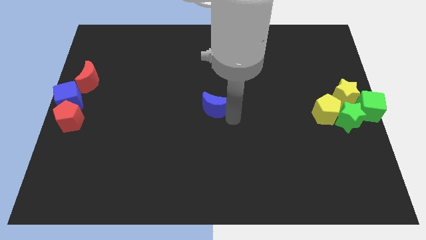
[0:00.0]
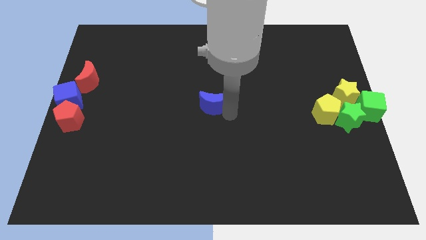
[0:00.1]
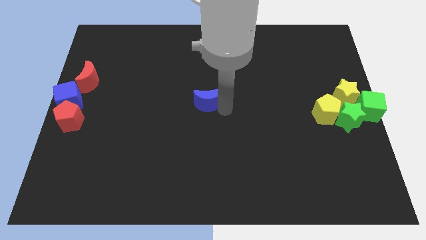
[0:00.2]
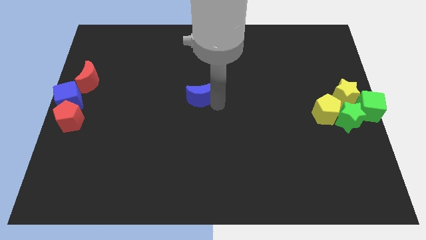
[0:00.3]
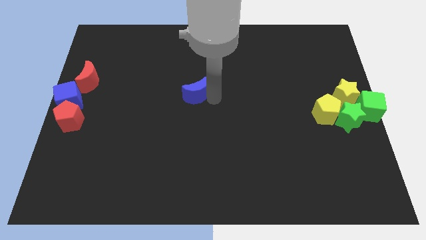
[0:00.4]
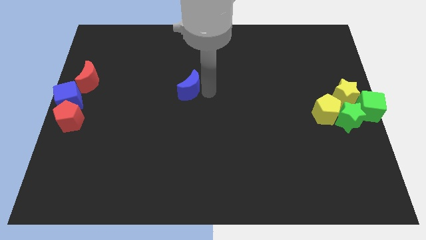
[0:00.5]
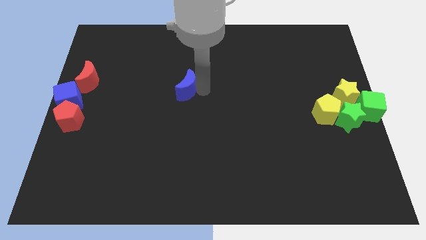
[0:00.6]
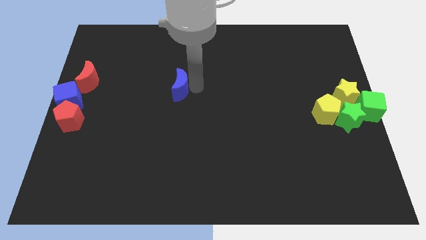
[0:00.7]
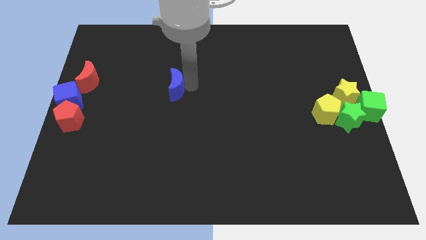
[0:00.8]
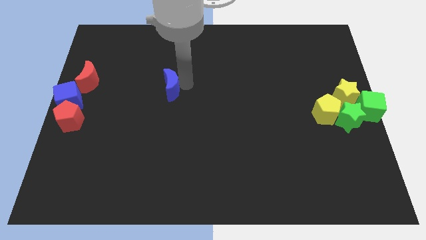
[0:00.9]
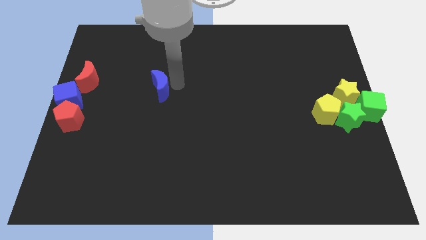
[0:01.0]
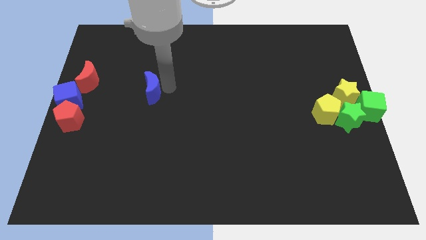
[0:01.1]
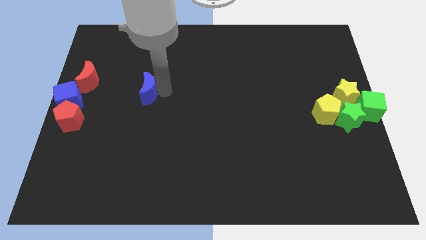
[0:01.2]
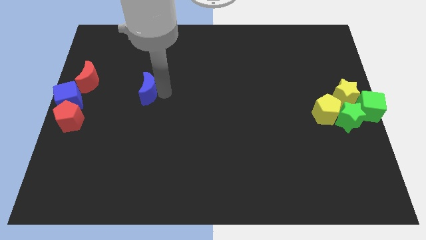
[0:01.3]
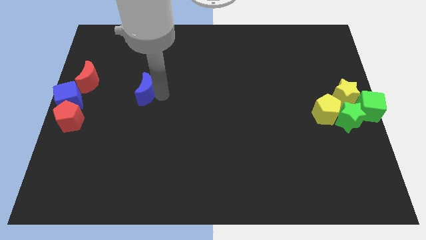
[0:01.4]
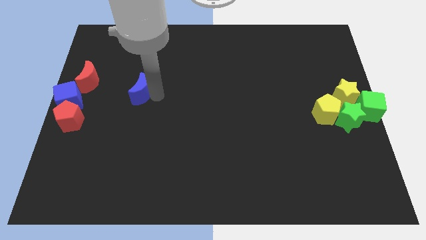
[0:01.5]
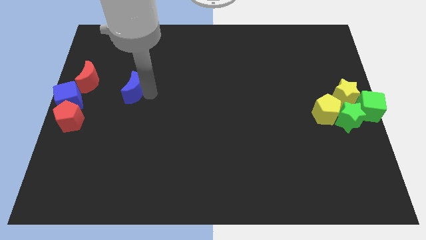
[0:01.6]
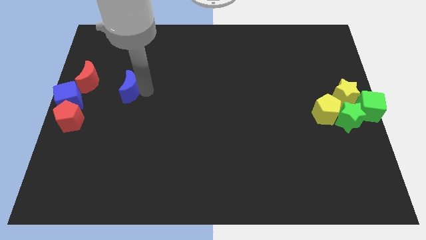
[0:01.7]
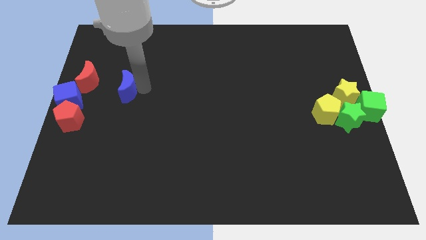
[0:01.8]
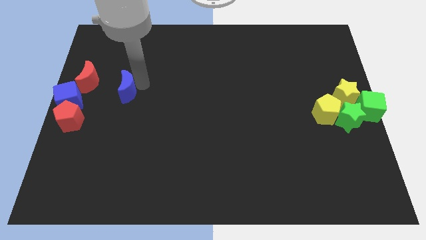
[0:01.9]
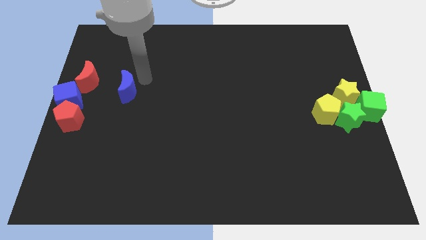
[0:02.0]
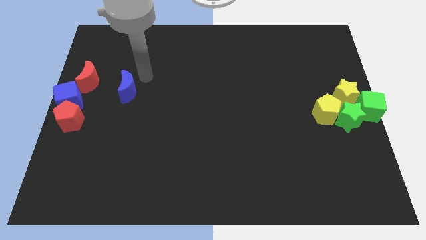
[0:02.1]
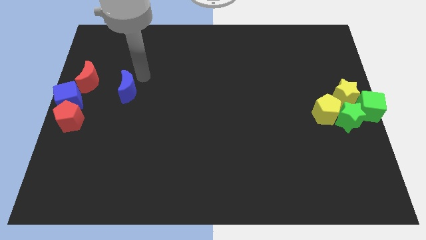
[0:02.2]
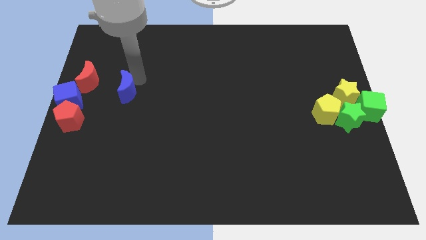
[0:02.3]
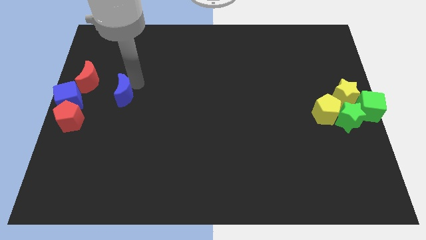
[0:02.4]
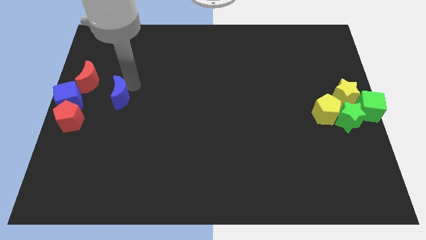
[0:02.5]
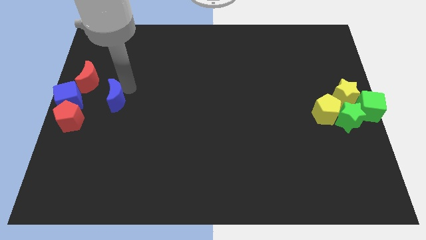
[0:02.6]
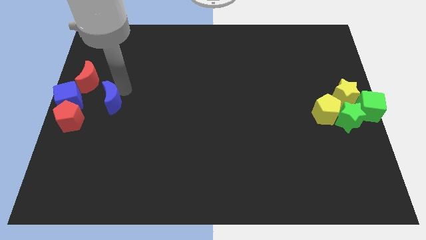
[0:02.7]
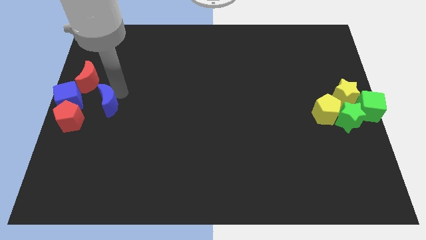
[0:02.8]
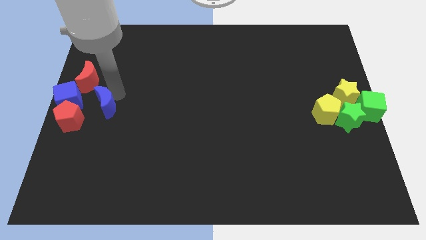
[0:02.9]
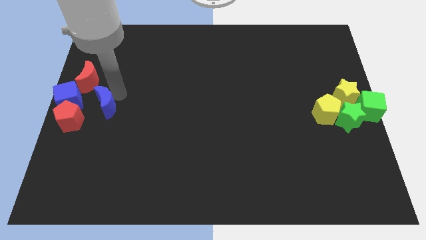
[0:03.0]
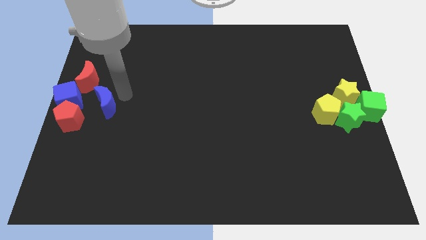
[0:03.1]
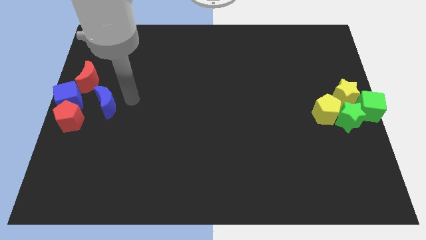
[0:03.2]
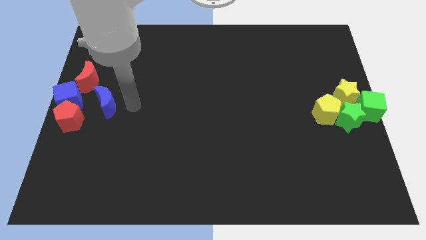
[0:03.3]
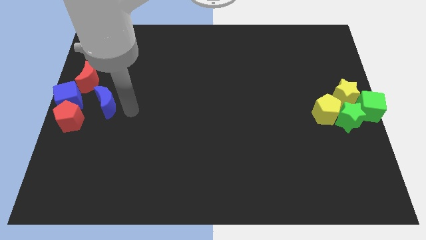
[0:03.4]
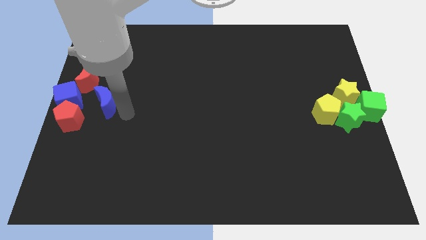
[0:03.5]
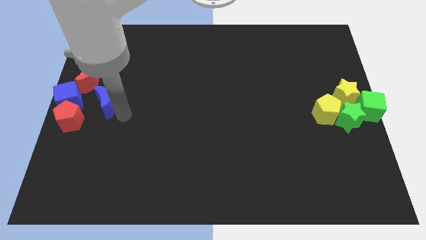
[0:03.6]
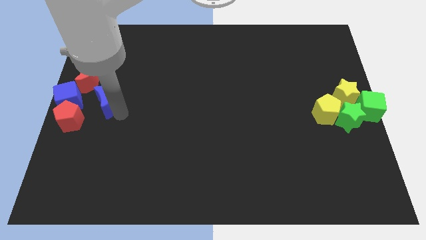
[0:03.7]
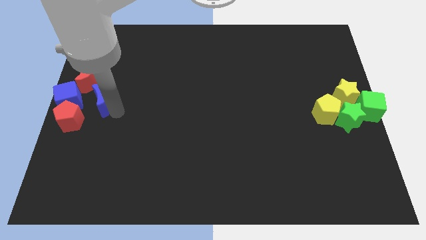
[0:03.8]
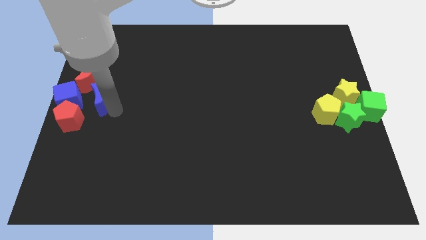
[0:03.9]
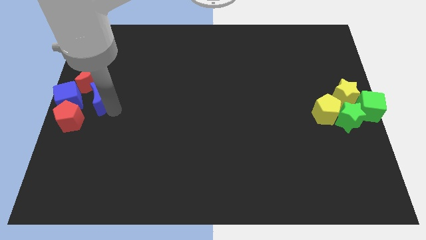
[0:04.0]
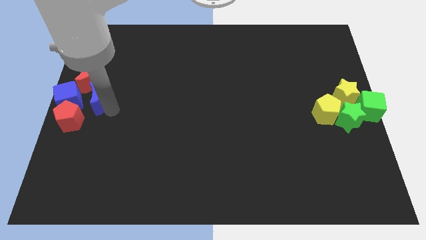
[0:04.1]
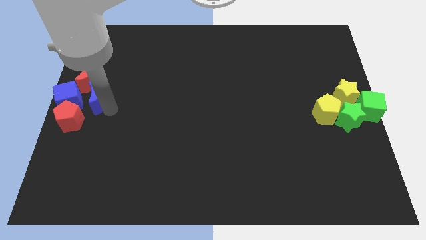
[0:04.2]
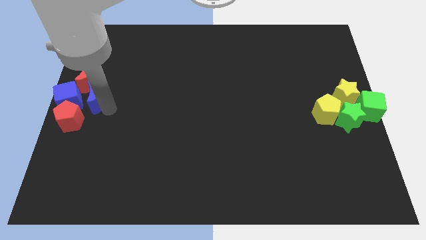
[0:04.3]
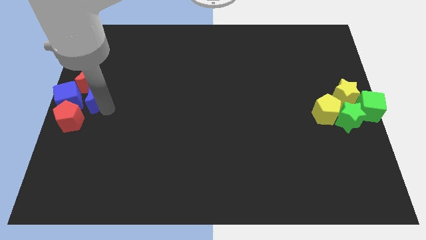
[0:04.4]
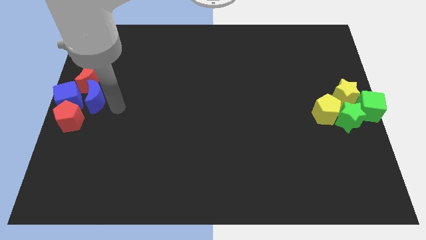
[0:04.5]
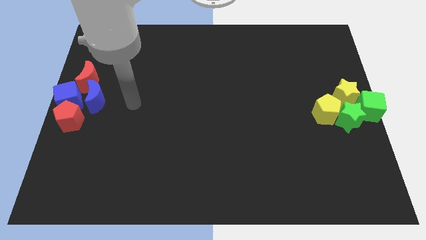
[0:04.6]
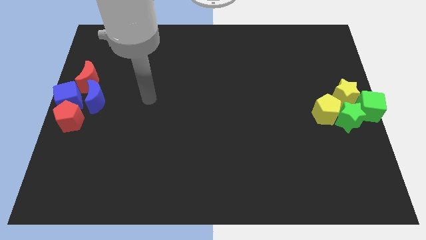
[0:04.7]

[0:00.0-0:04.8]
place the blue crescent towards the right side of the blue cube

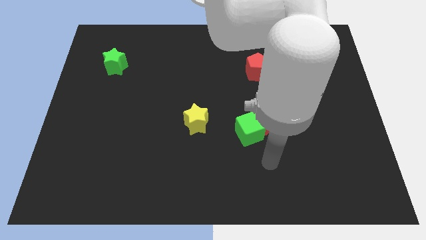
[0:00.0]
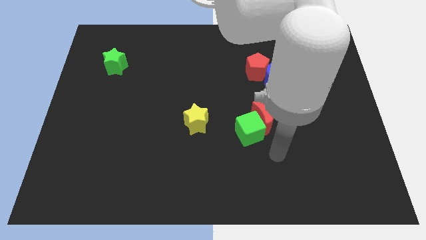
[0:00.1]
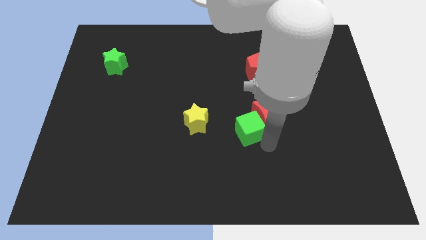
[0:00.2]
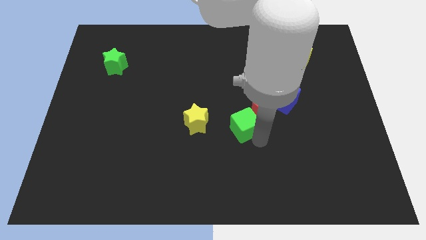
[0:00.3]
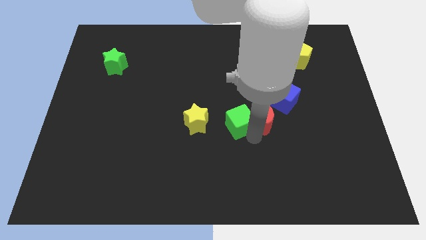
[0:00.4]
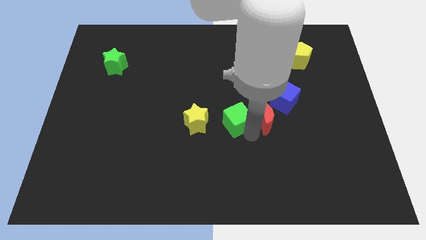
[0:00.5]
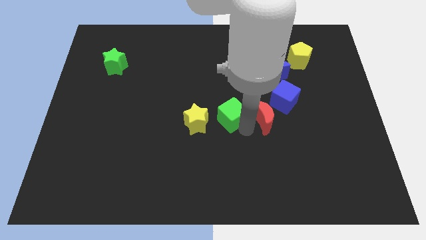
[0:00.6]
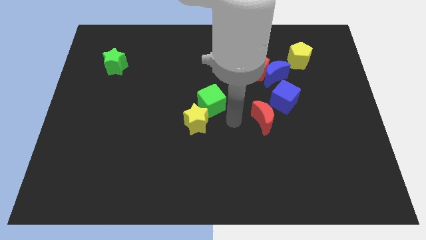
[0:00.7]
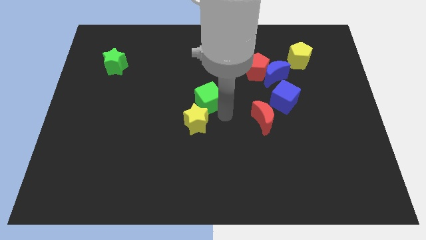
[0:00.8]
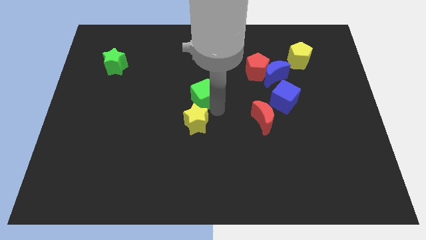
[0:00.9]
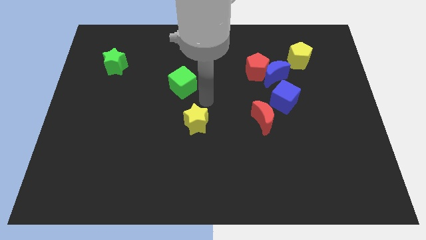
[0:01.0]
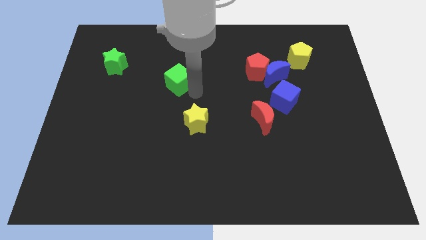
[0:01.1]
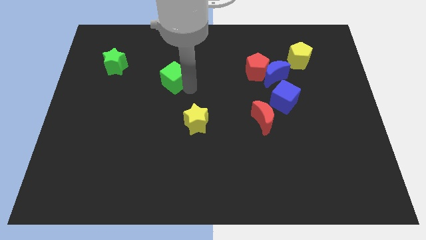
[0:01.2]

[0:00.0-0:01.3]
move the green cube to the top left side of the yellow star

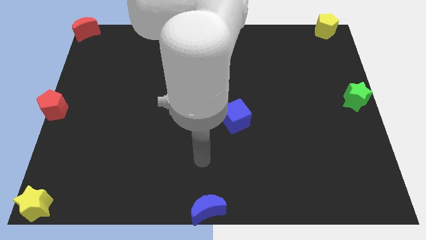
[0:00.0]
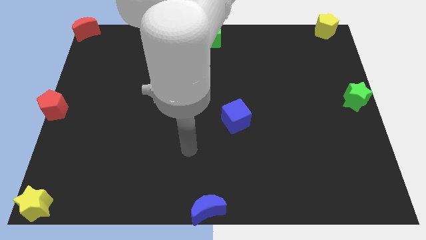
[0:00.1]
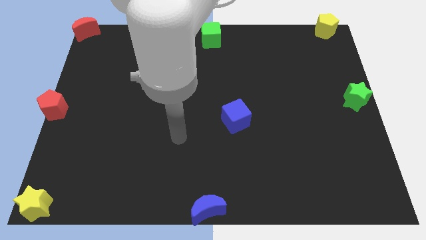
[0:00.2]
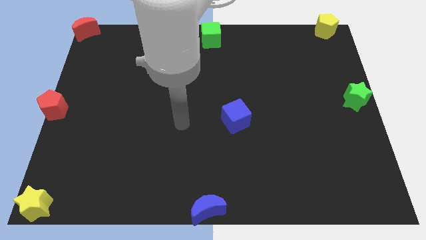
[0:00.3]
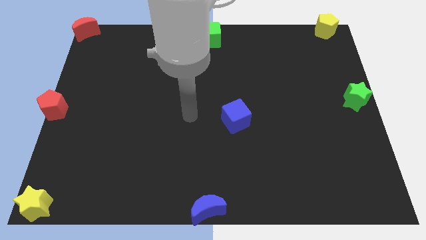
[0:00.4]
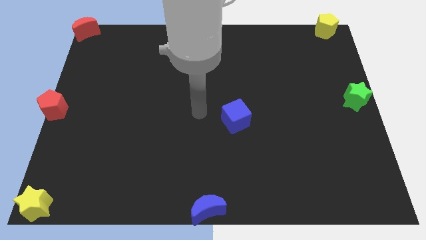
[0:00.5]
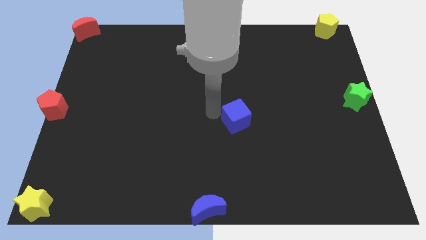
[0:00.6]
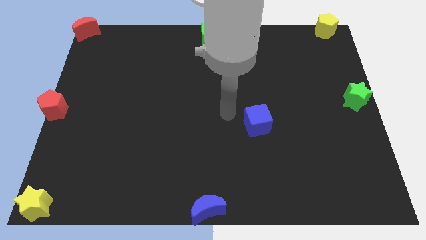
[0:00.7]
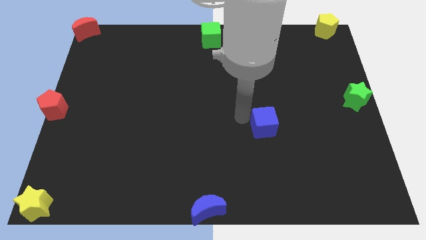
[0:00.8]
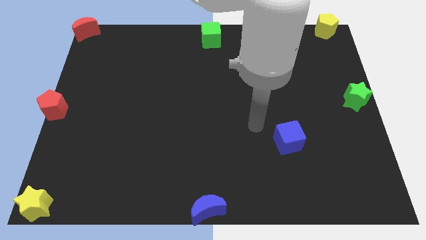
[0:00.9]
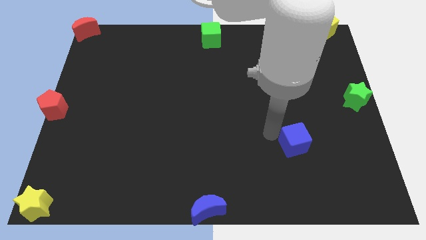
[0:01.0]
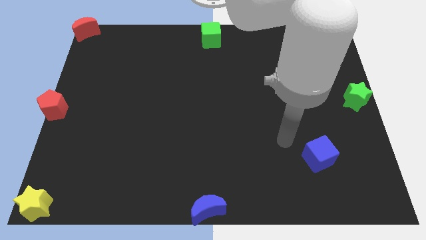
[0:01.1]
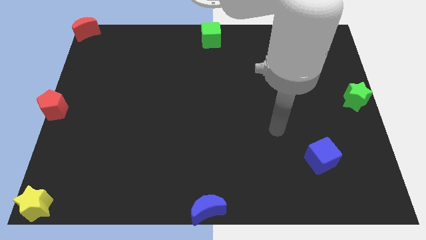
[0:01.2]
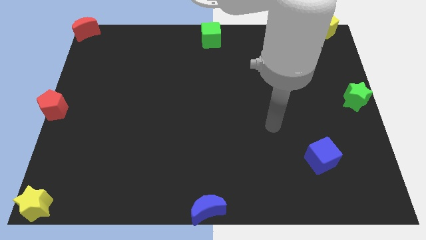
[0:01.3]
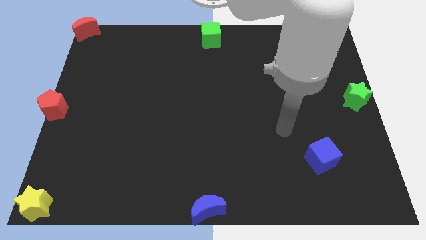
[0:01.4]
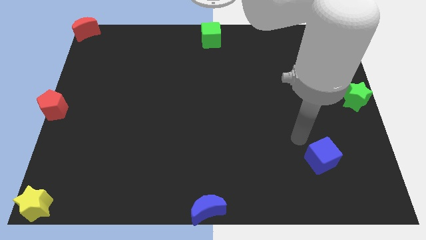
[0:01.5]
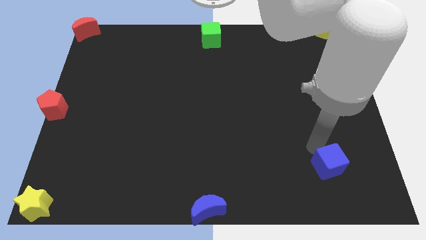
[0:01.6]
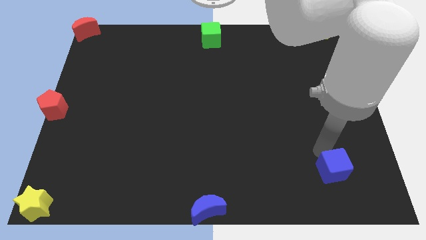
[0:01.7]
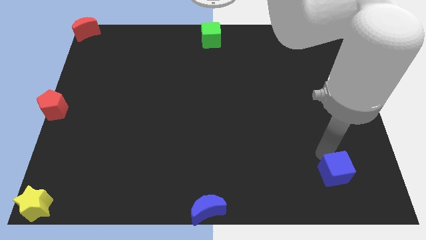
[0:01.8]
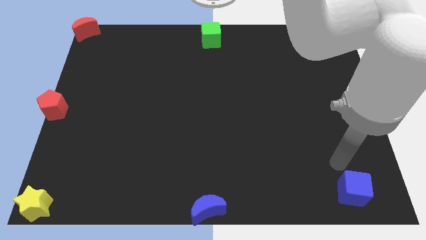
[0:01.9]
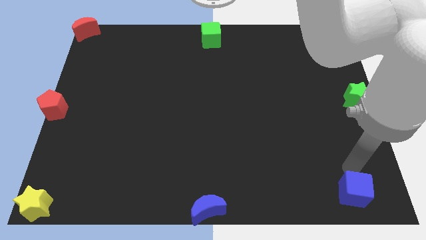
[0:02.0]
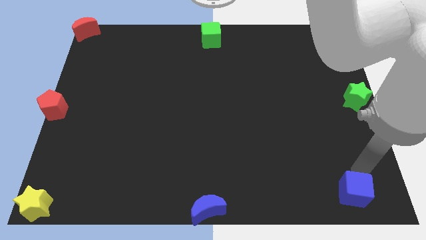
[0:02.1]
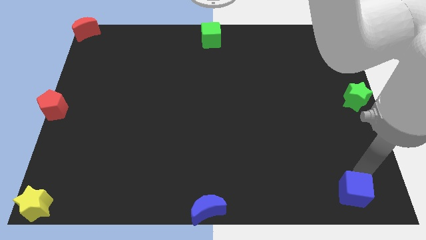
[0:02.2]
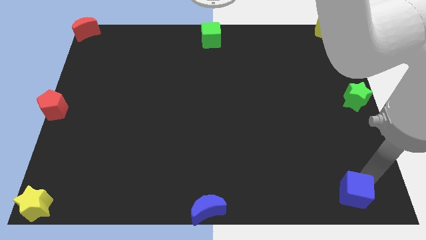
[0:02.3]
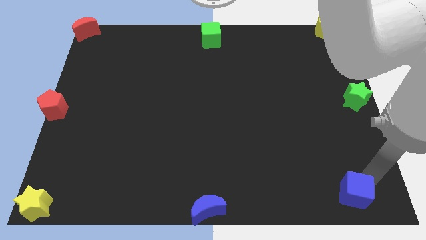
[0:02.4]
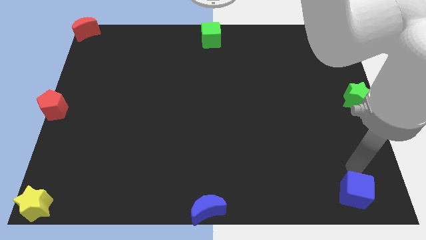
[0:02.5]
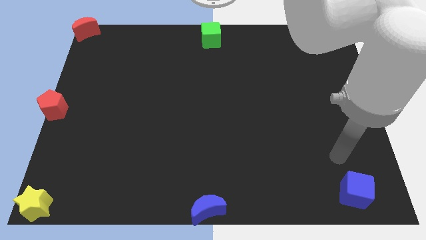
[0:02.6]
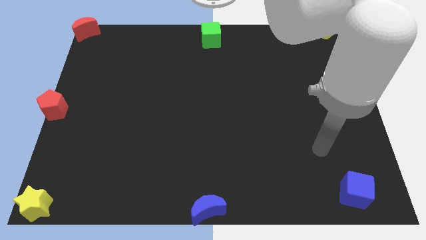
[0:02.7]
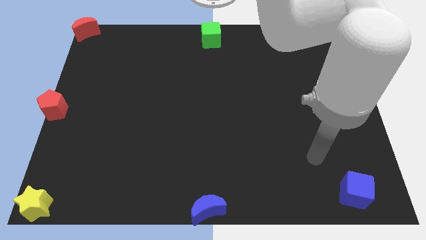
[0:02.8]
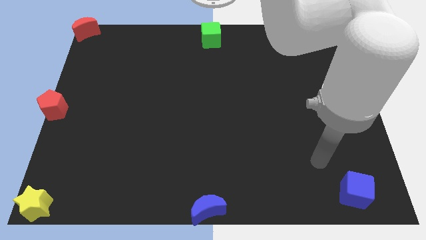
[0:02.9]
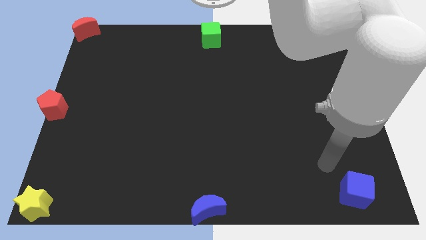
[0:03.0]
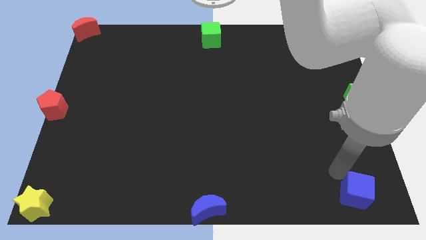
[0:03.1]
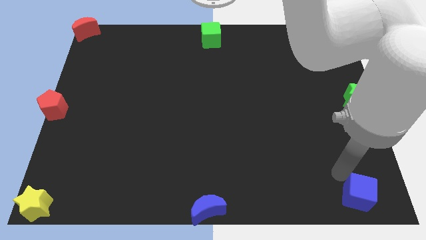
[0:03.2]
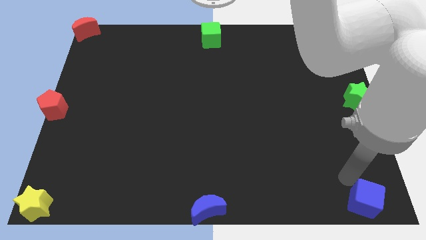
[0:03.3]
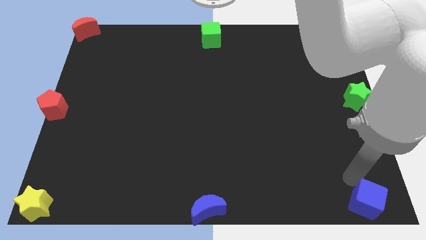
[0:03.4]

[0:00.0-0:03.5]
move the blue cube towards the bottom right of board
